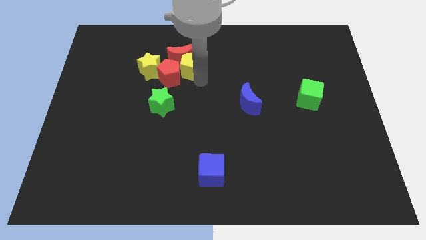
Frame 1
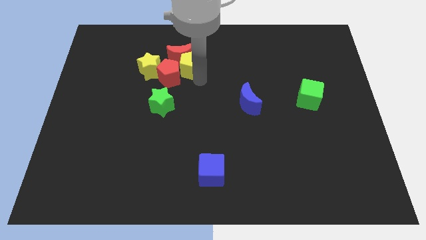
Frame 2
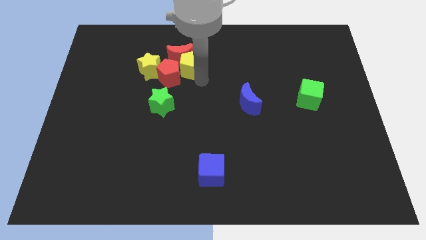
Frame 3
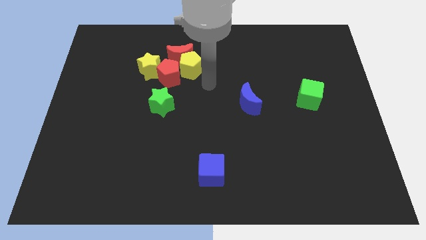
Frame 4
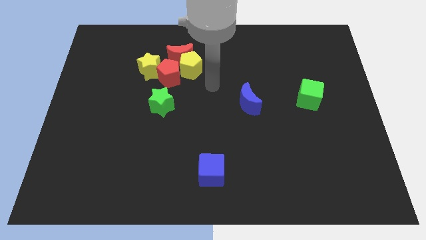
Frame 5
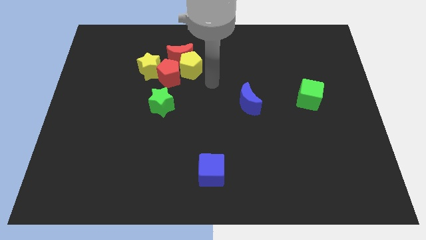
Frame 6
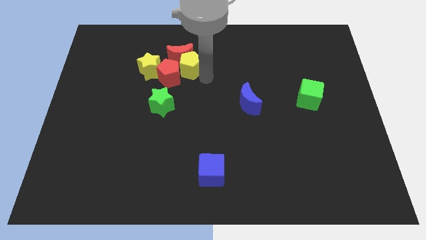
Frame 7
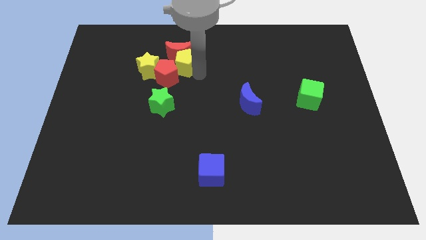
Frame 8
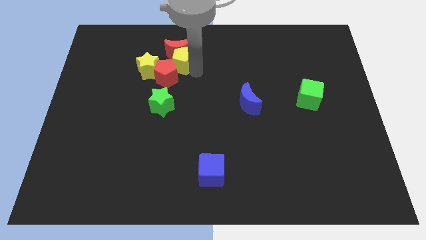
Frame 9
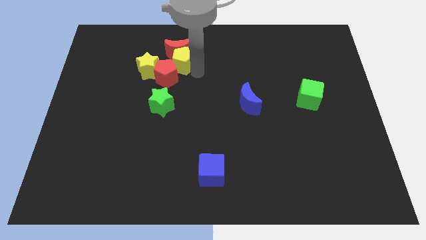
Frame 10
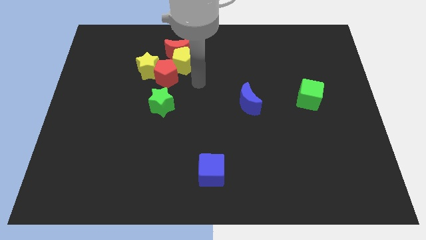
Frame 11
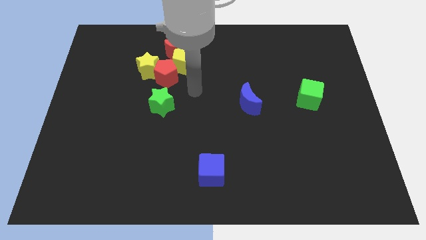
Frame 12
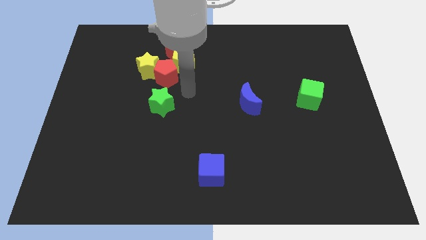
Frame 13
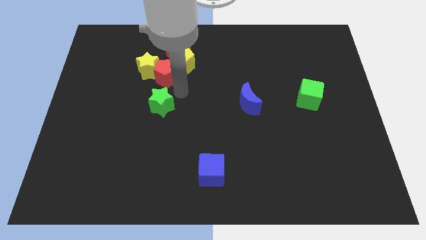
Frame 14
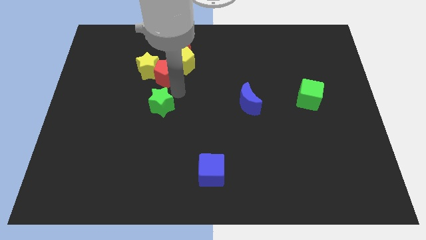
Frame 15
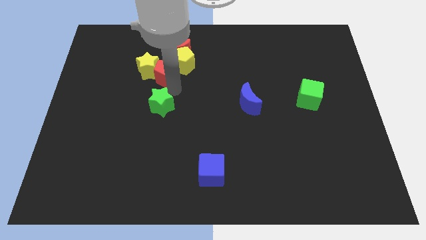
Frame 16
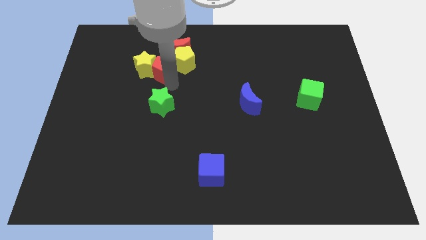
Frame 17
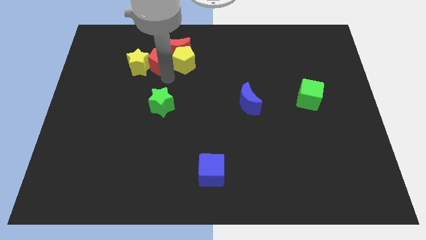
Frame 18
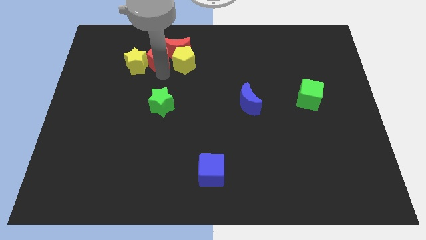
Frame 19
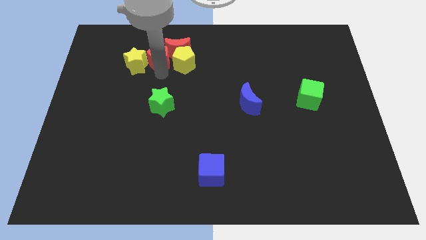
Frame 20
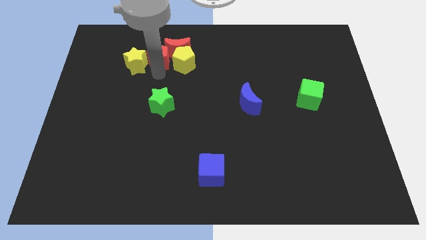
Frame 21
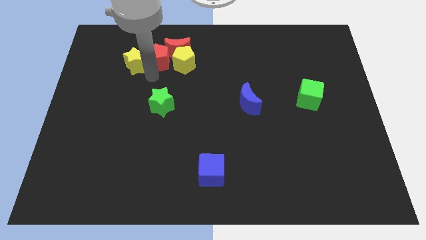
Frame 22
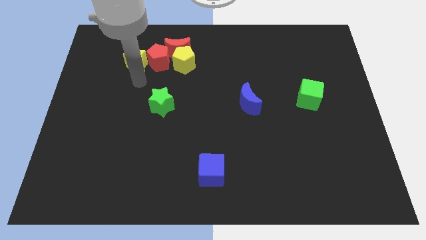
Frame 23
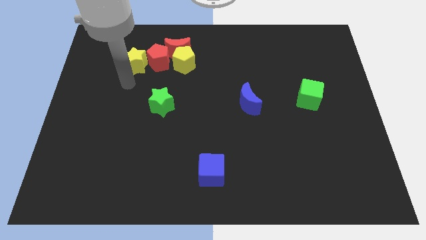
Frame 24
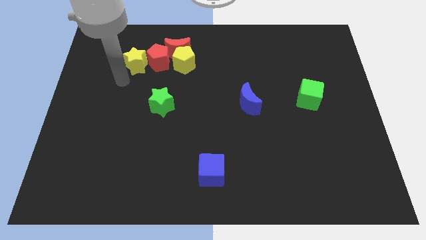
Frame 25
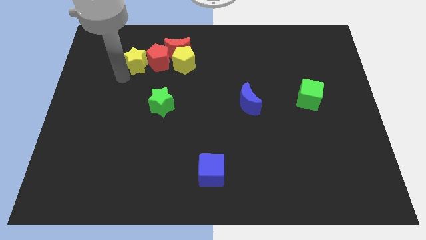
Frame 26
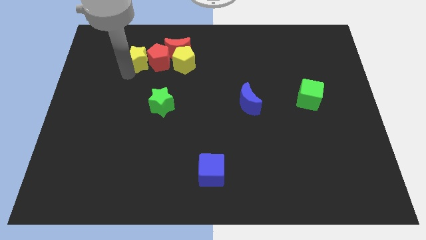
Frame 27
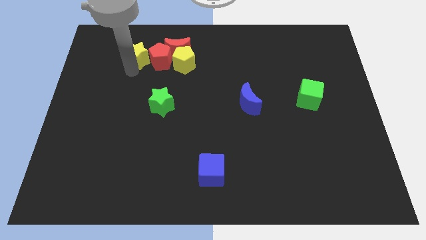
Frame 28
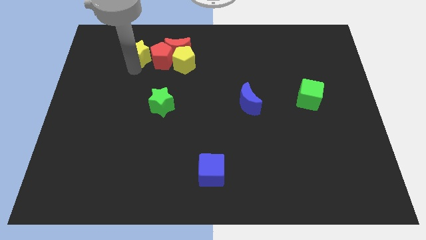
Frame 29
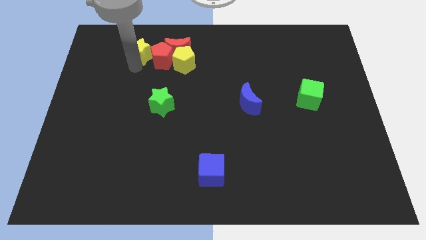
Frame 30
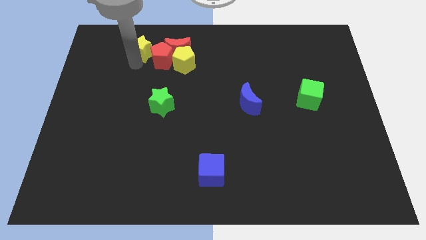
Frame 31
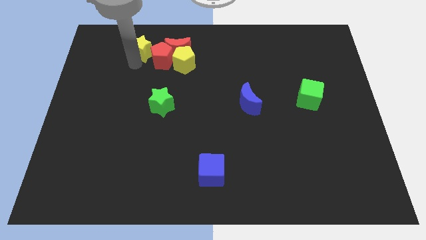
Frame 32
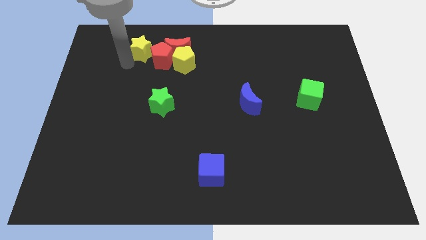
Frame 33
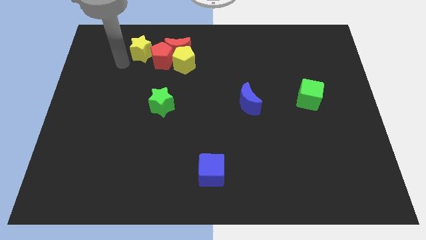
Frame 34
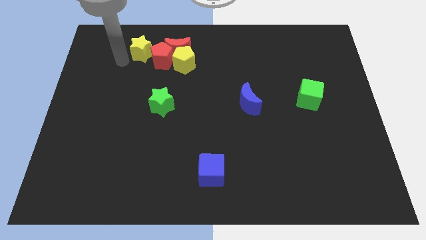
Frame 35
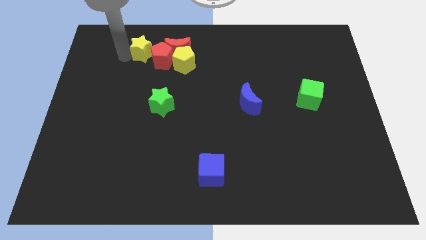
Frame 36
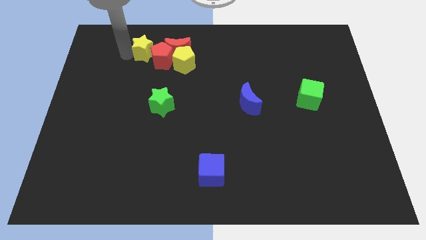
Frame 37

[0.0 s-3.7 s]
push the red pentagon into yellow star with the yellow pentagon

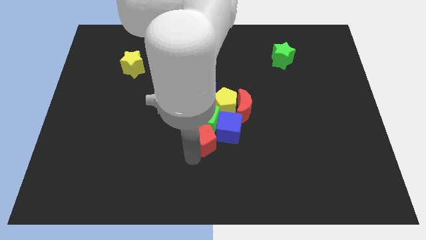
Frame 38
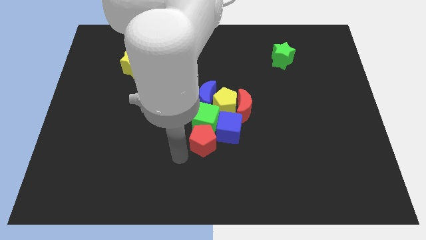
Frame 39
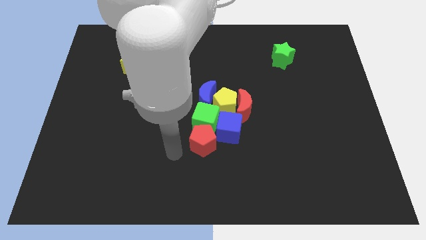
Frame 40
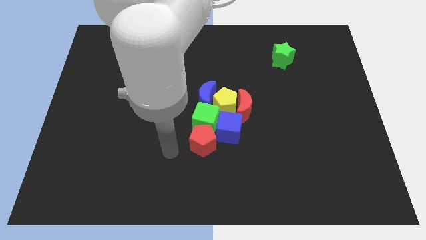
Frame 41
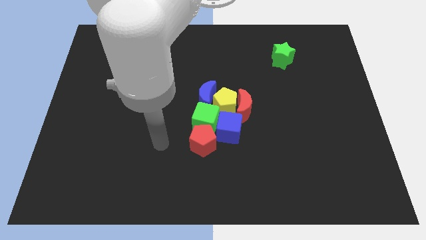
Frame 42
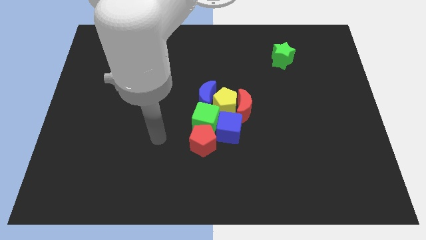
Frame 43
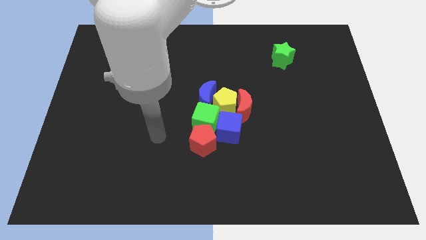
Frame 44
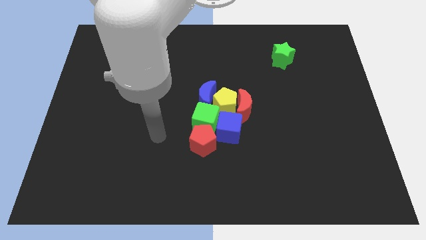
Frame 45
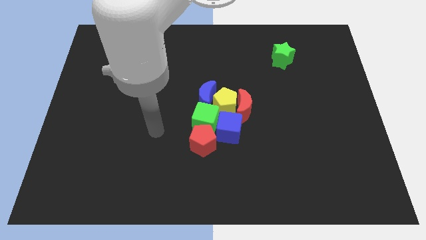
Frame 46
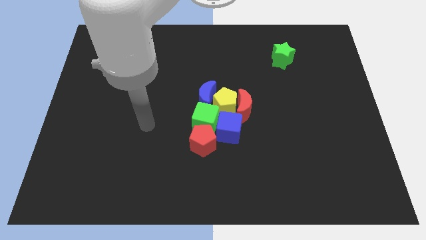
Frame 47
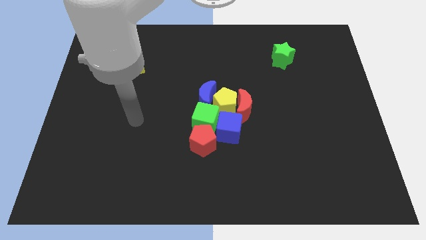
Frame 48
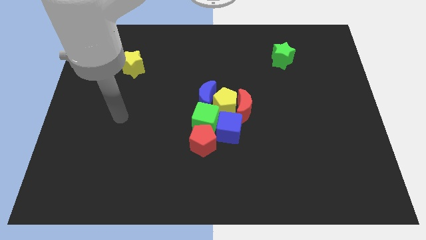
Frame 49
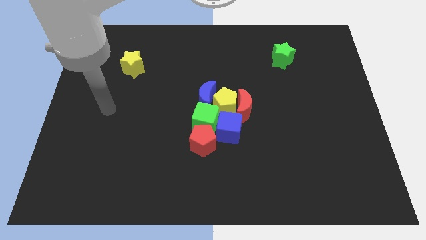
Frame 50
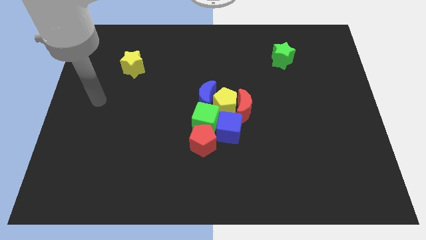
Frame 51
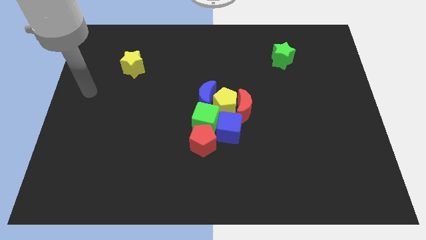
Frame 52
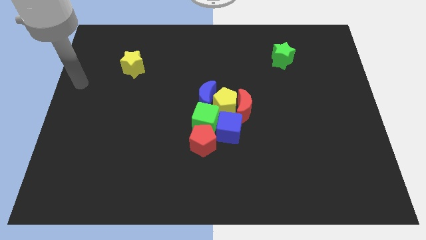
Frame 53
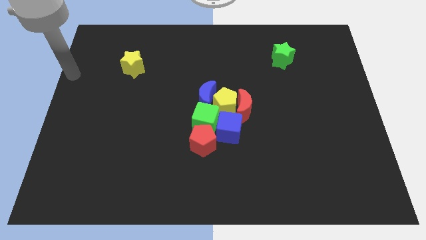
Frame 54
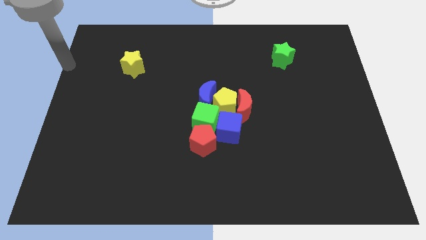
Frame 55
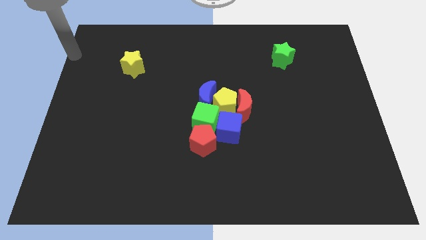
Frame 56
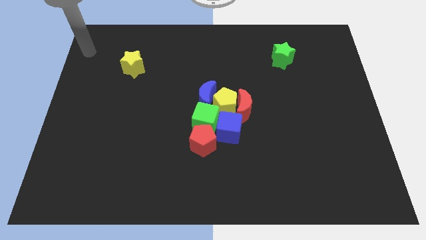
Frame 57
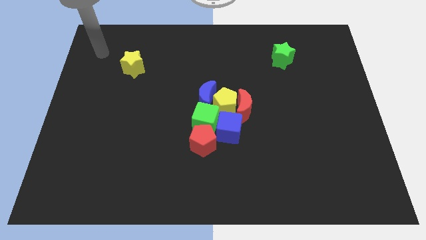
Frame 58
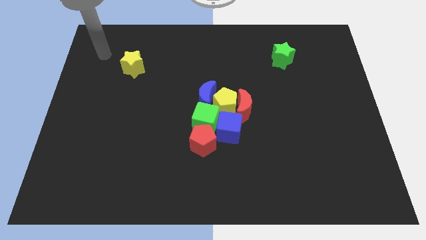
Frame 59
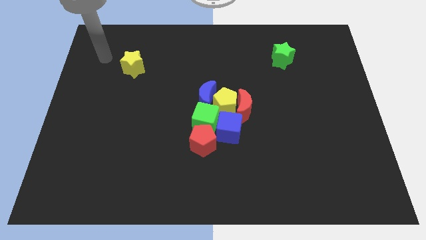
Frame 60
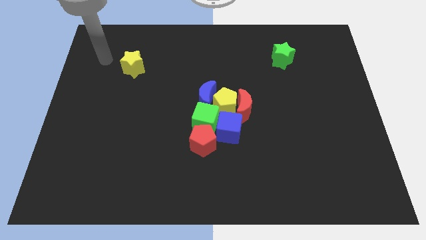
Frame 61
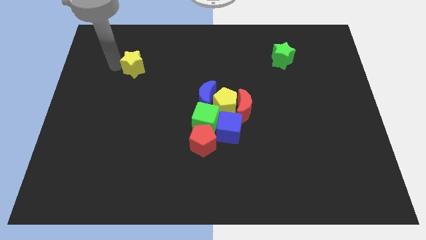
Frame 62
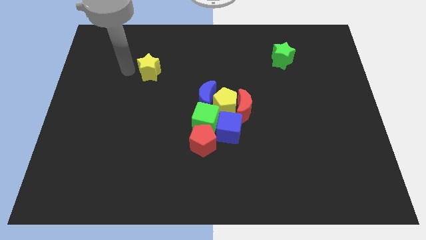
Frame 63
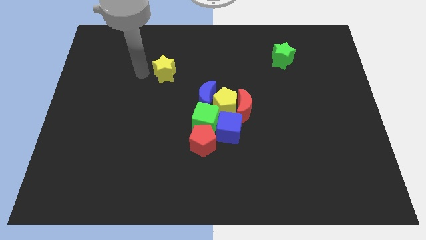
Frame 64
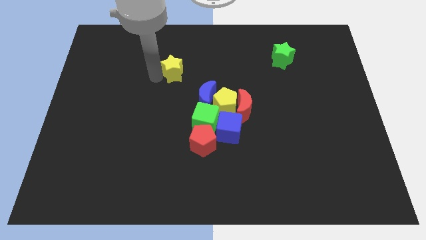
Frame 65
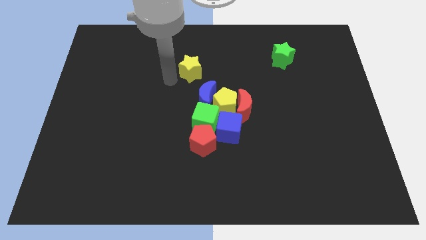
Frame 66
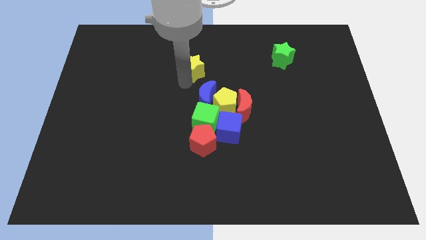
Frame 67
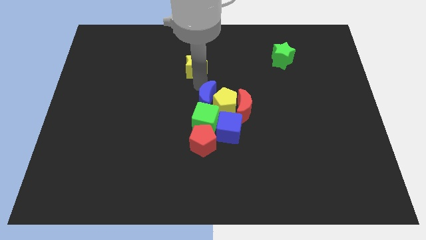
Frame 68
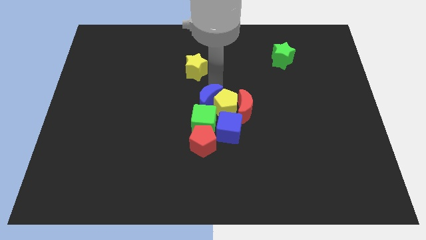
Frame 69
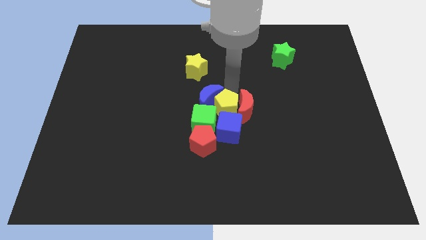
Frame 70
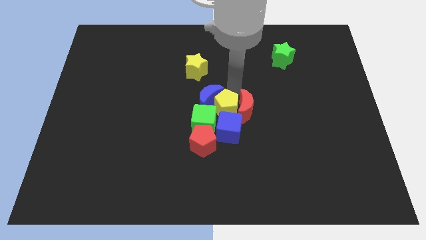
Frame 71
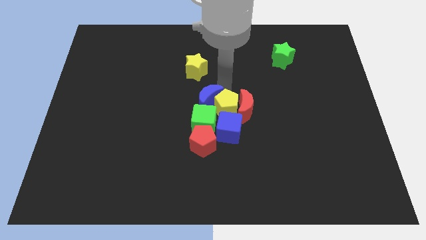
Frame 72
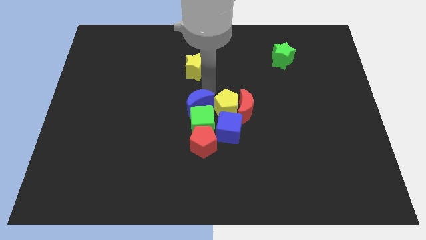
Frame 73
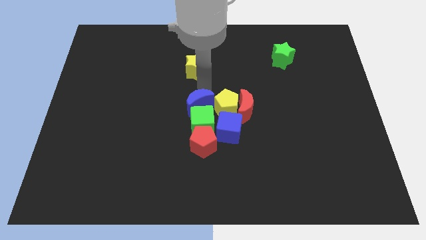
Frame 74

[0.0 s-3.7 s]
place the yellow star above the blue moon

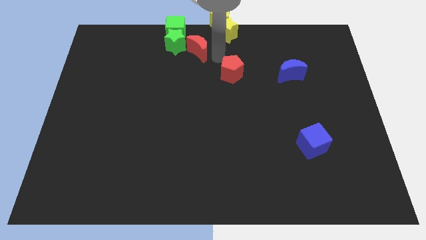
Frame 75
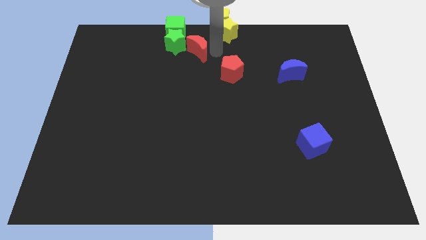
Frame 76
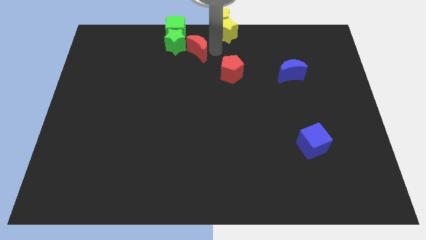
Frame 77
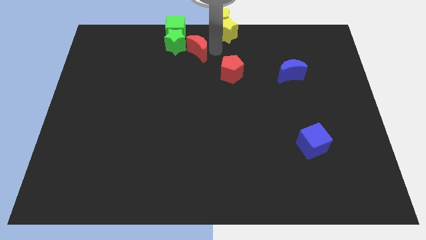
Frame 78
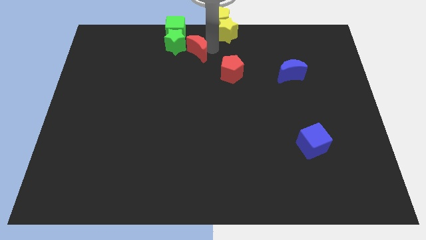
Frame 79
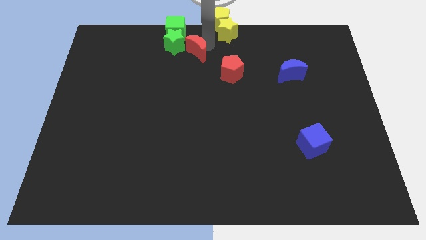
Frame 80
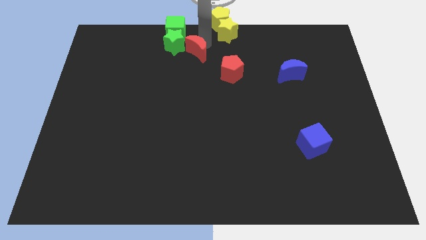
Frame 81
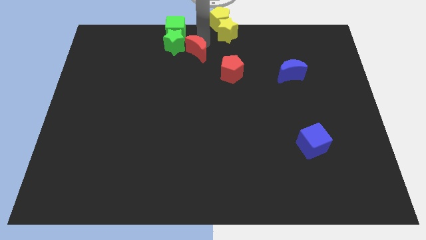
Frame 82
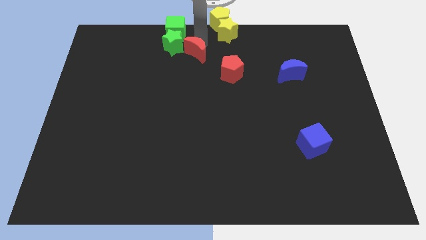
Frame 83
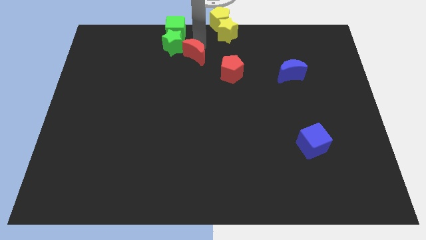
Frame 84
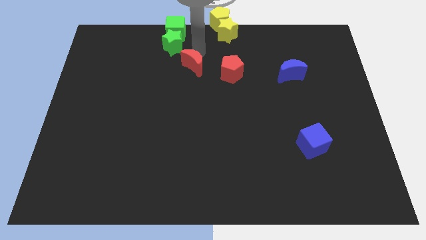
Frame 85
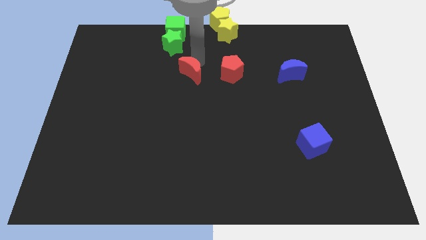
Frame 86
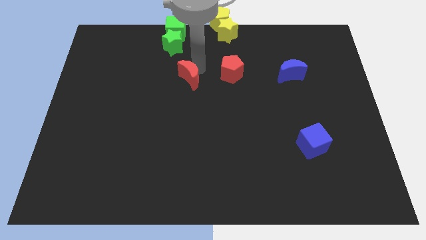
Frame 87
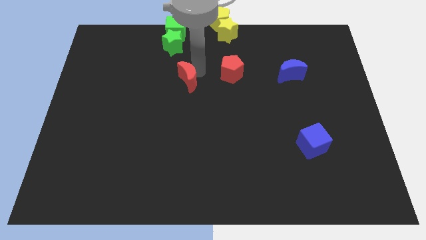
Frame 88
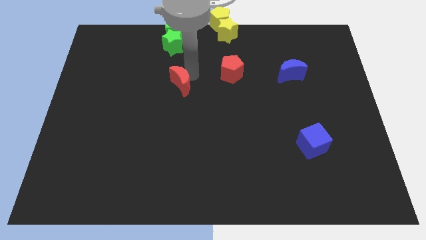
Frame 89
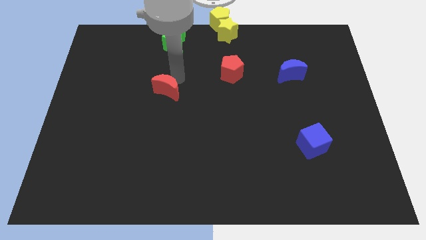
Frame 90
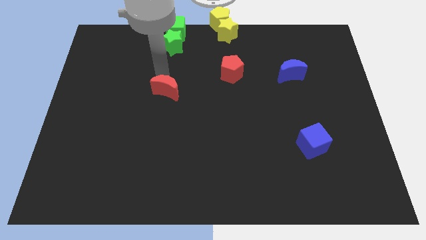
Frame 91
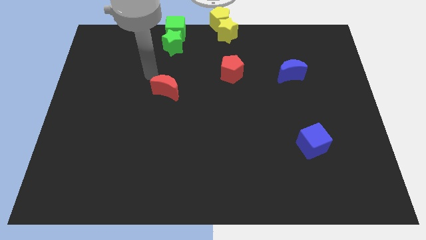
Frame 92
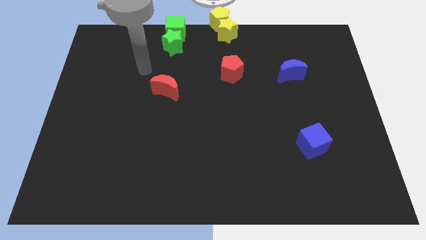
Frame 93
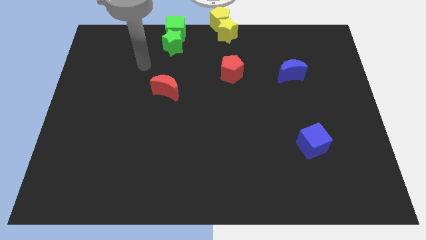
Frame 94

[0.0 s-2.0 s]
move the red moon below the green star
